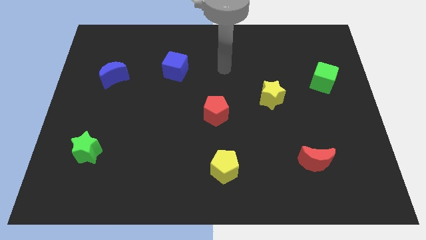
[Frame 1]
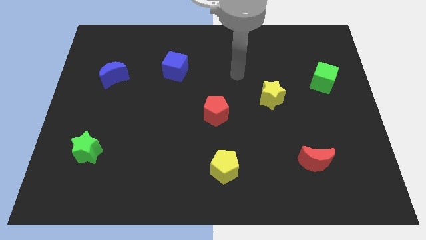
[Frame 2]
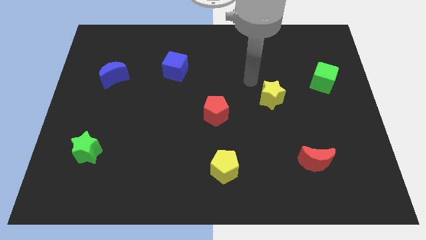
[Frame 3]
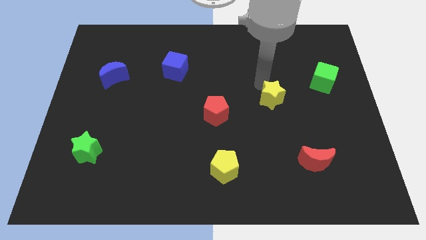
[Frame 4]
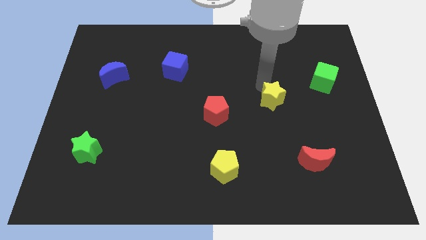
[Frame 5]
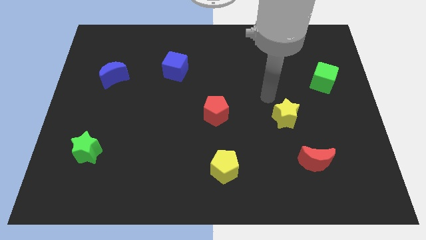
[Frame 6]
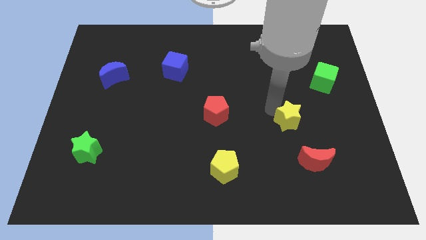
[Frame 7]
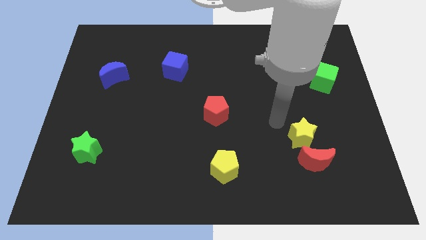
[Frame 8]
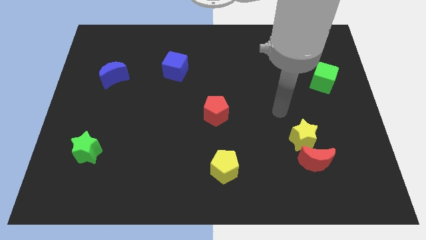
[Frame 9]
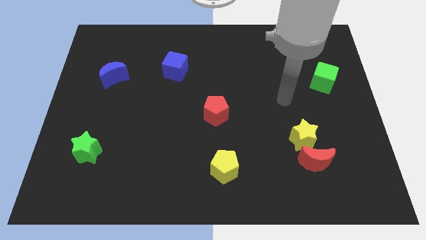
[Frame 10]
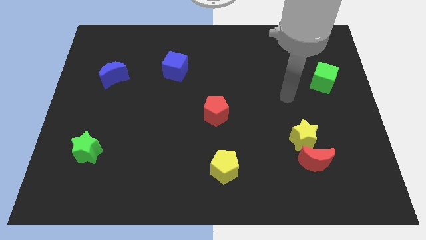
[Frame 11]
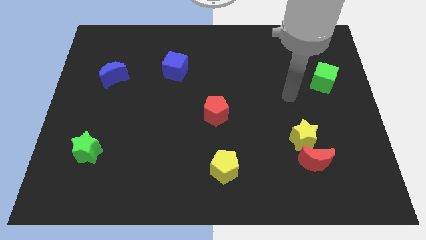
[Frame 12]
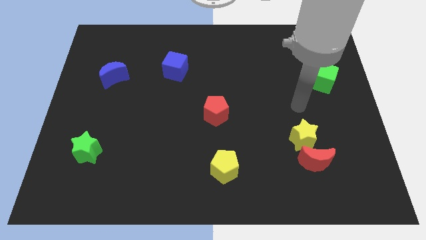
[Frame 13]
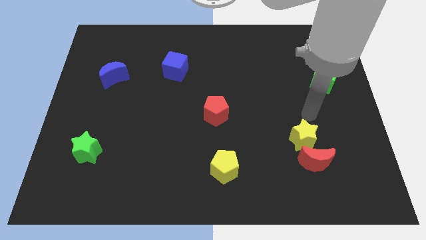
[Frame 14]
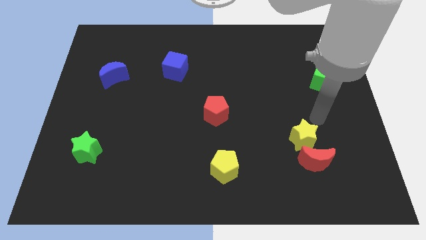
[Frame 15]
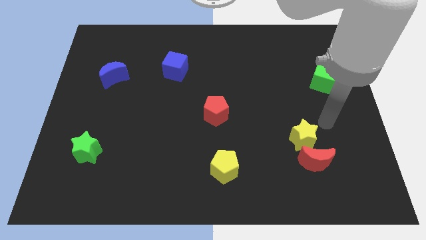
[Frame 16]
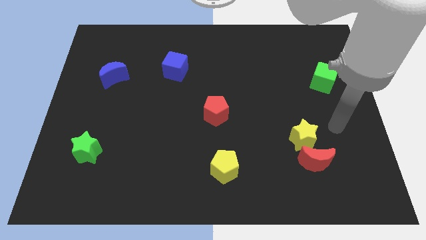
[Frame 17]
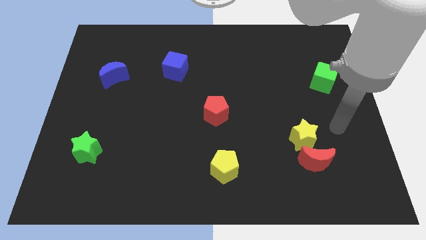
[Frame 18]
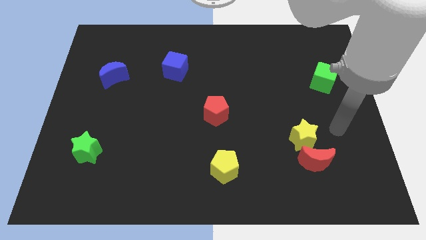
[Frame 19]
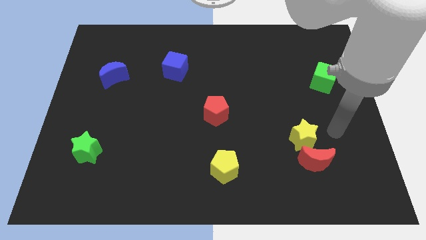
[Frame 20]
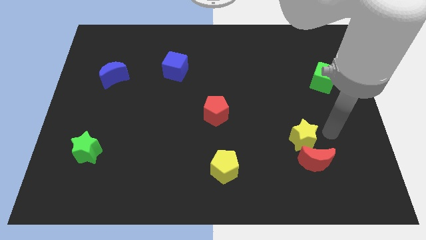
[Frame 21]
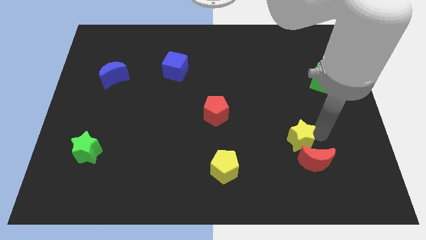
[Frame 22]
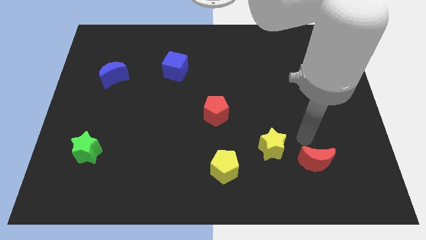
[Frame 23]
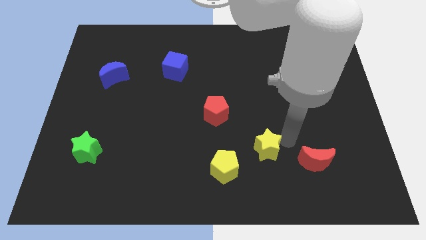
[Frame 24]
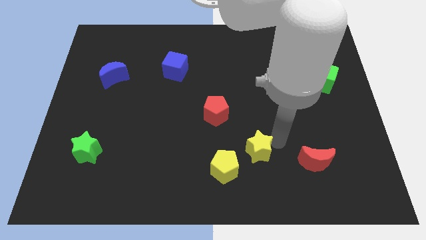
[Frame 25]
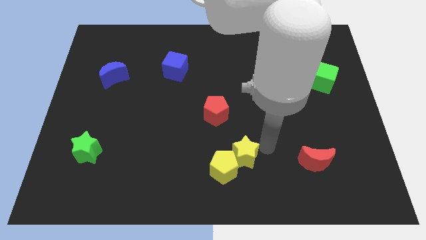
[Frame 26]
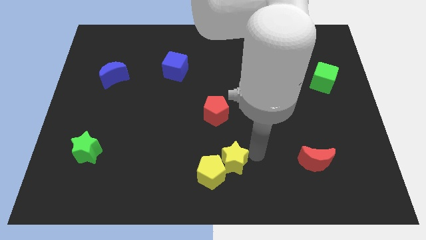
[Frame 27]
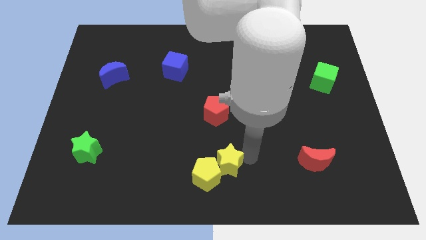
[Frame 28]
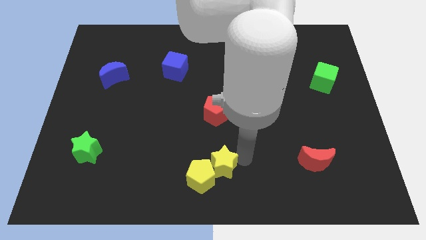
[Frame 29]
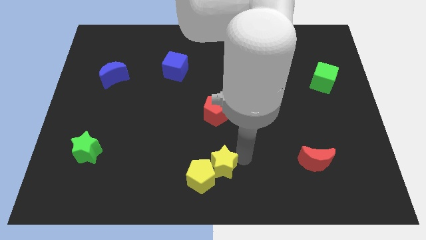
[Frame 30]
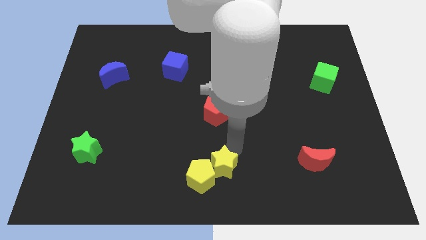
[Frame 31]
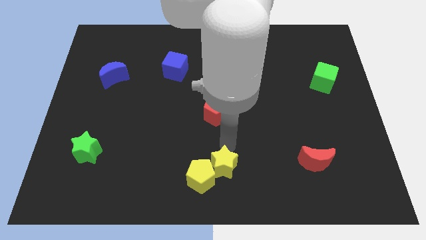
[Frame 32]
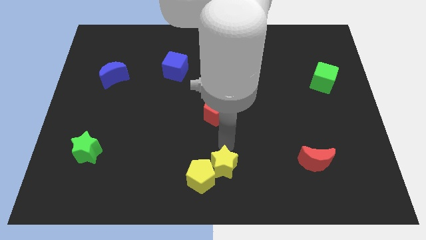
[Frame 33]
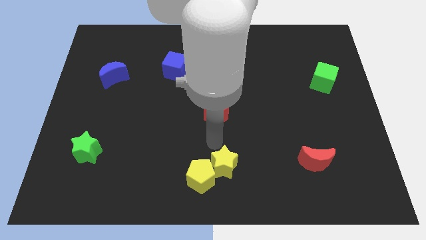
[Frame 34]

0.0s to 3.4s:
slide the yellow star into the yellow pentagon

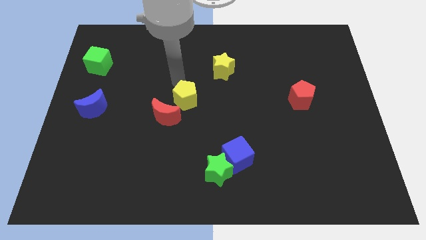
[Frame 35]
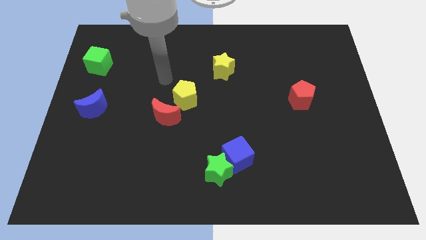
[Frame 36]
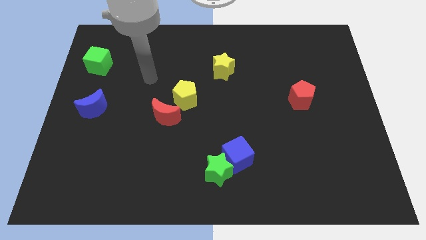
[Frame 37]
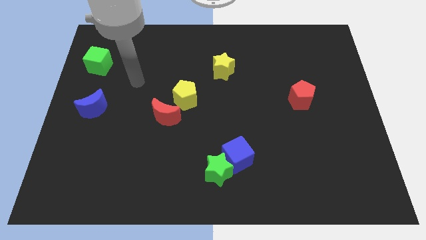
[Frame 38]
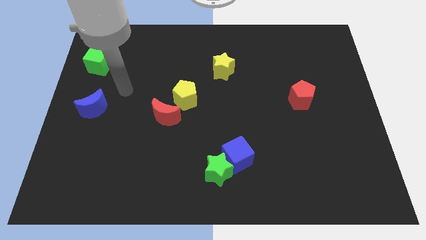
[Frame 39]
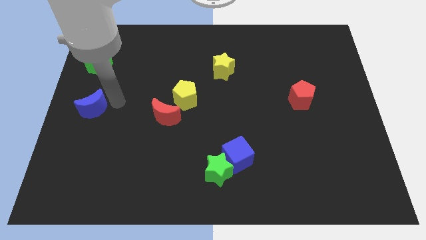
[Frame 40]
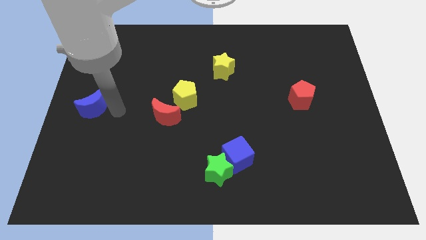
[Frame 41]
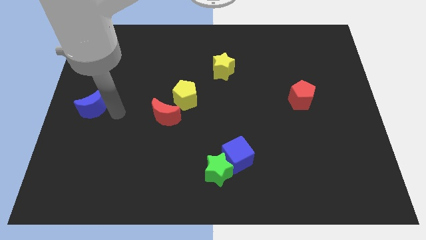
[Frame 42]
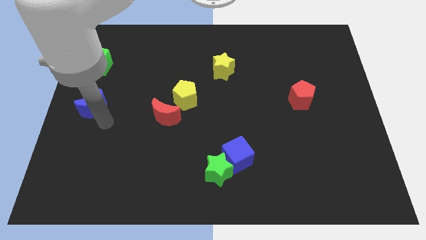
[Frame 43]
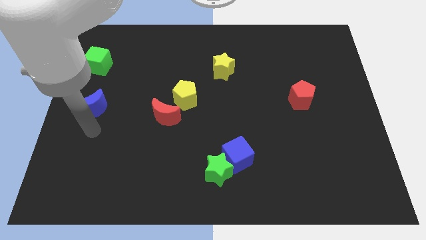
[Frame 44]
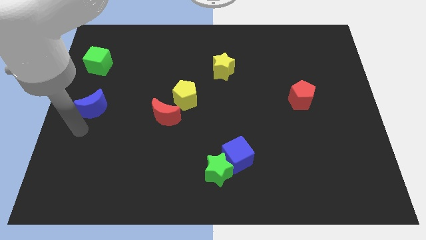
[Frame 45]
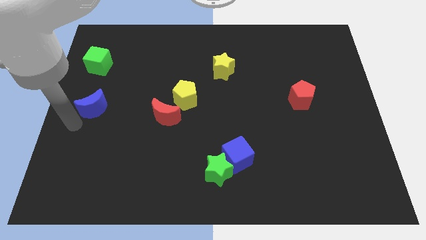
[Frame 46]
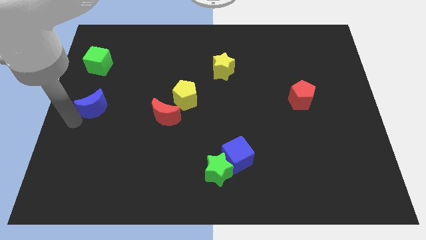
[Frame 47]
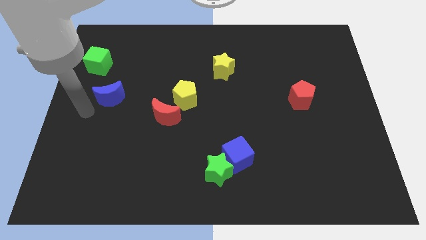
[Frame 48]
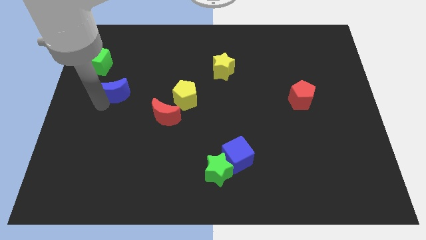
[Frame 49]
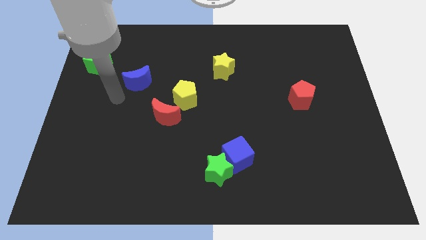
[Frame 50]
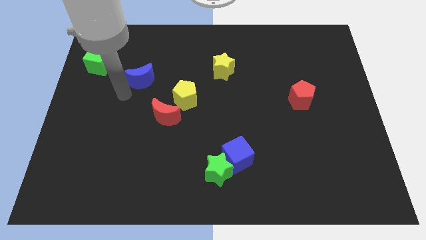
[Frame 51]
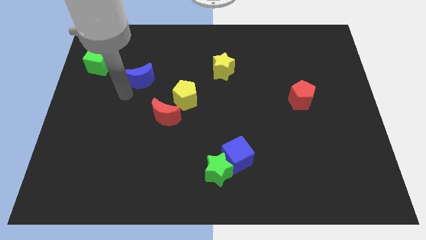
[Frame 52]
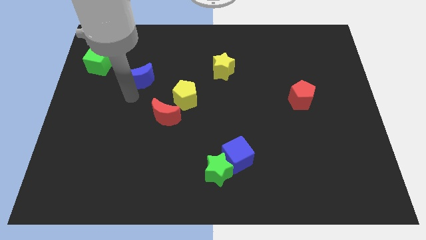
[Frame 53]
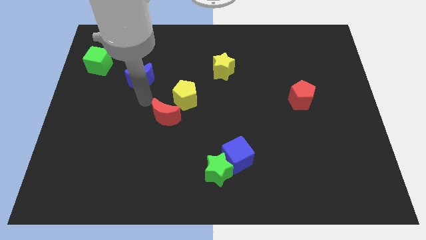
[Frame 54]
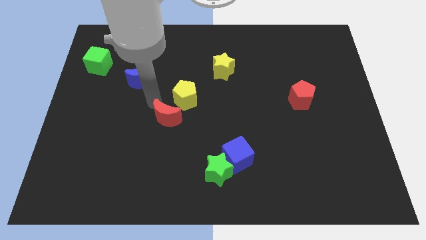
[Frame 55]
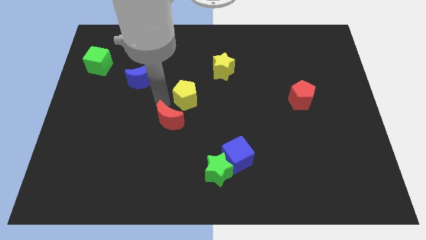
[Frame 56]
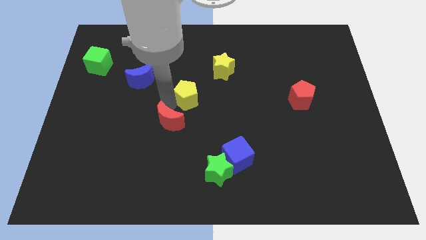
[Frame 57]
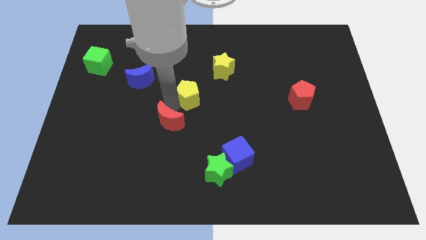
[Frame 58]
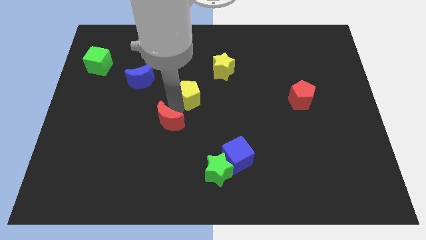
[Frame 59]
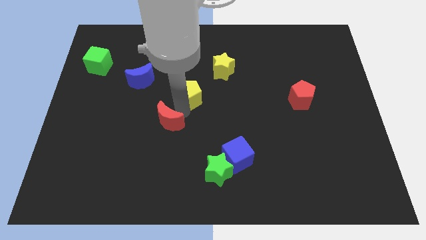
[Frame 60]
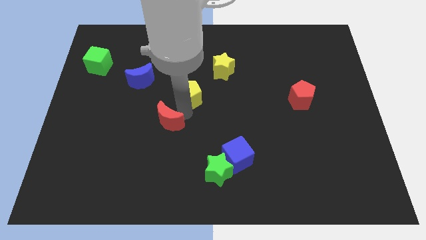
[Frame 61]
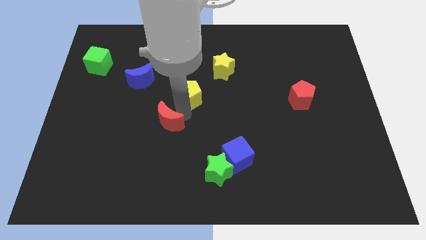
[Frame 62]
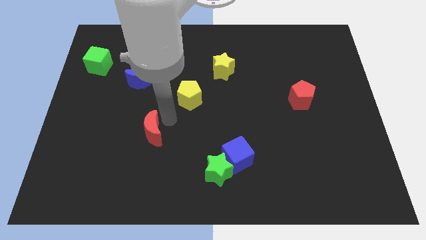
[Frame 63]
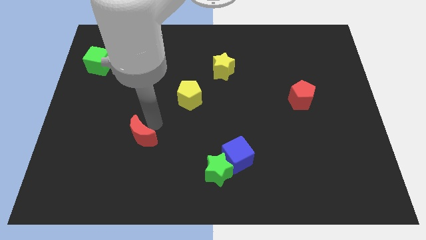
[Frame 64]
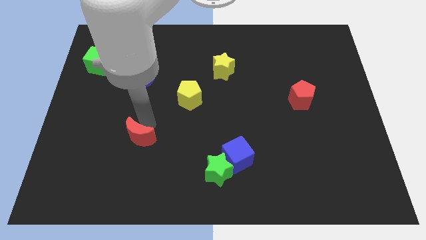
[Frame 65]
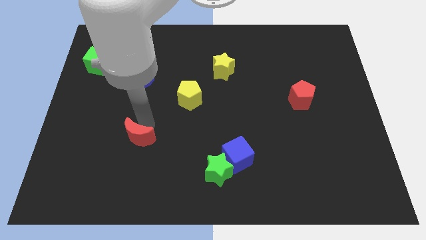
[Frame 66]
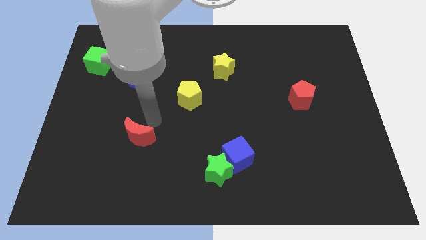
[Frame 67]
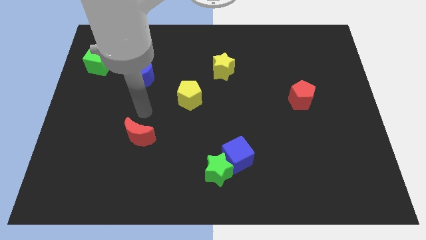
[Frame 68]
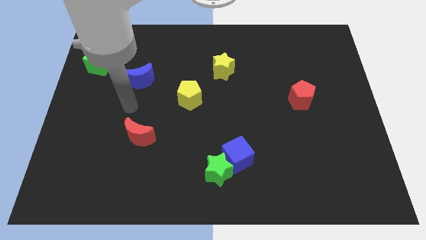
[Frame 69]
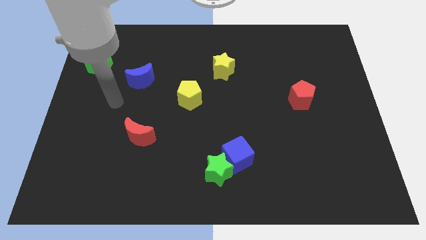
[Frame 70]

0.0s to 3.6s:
move the arm away from the yellow pentagon

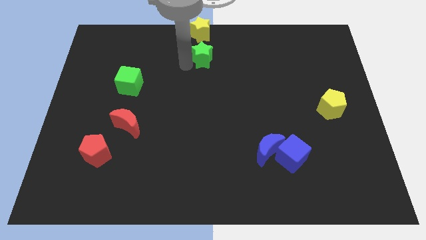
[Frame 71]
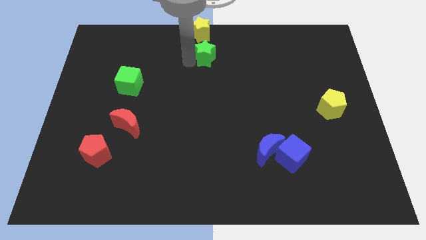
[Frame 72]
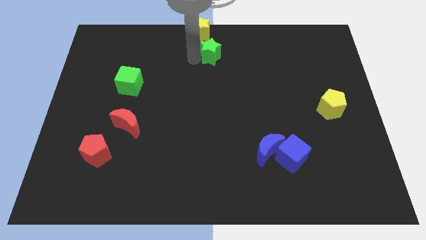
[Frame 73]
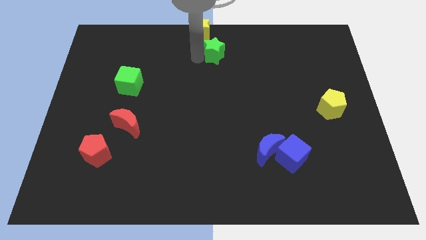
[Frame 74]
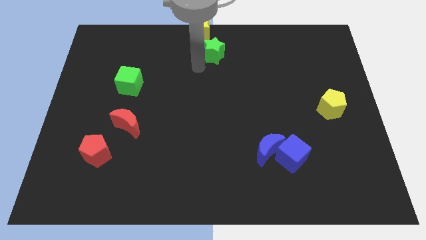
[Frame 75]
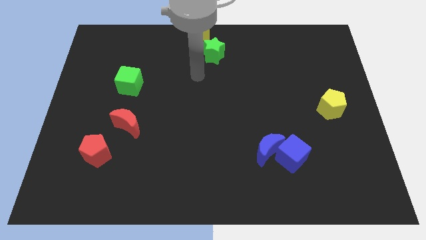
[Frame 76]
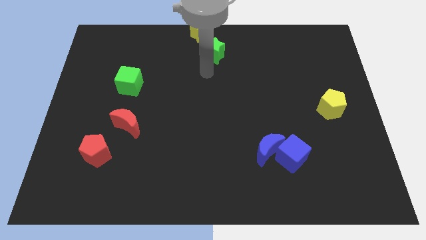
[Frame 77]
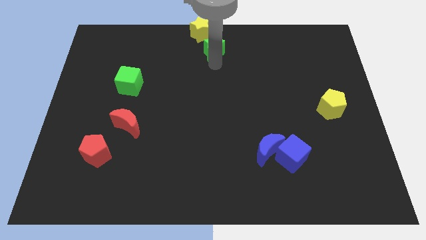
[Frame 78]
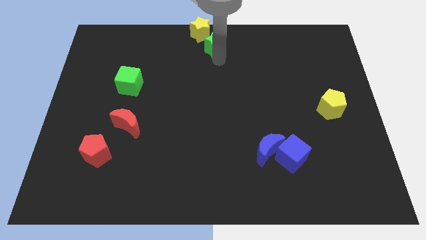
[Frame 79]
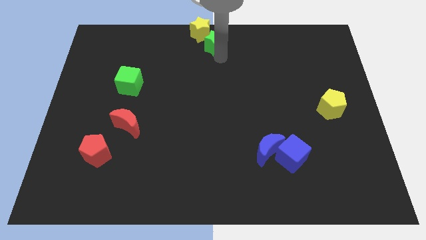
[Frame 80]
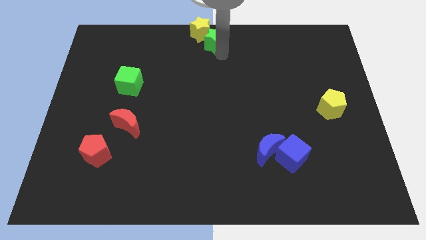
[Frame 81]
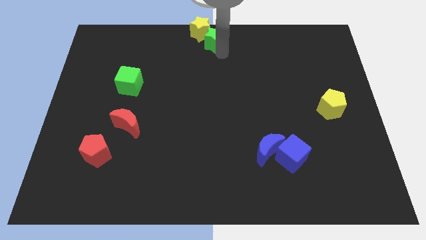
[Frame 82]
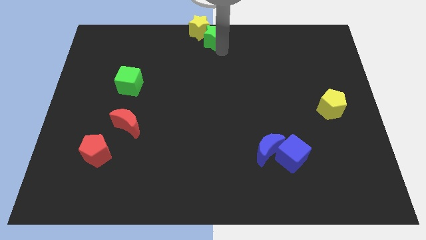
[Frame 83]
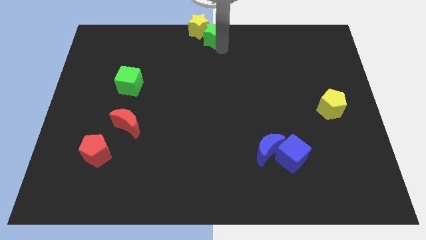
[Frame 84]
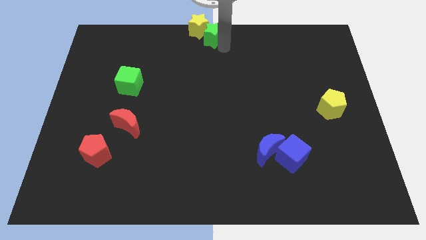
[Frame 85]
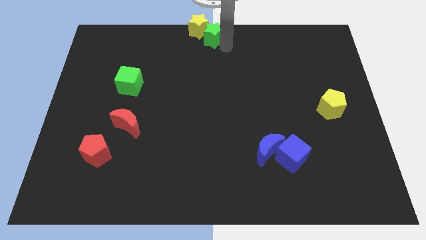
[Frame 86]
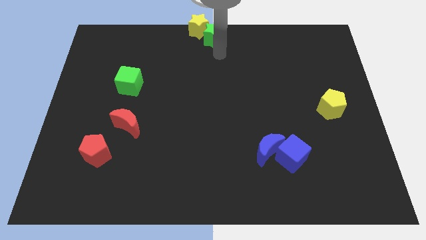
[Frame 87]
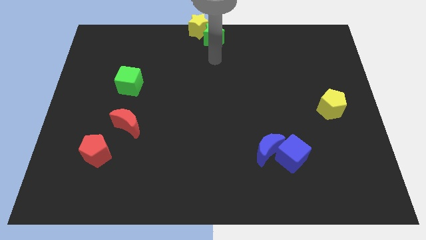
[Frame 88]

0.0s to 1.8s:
push the green star into the bottom of the yellow star

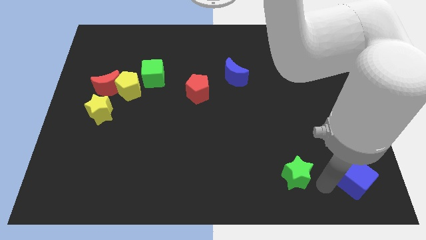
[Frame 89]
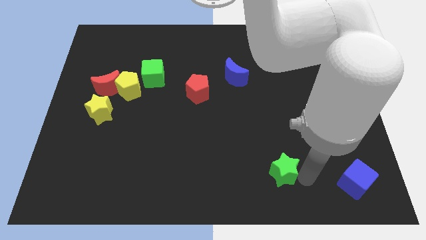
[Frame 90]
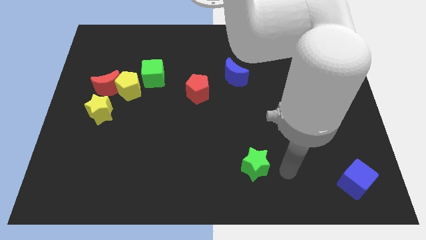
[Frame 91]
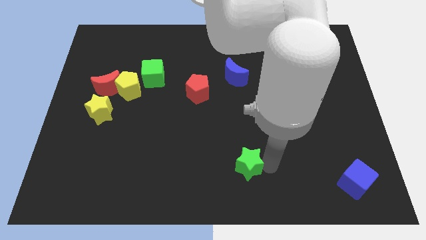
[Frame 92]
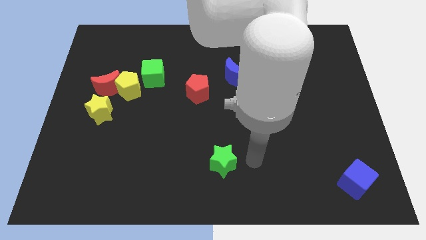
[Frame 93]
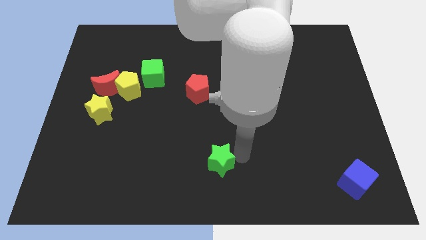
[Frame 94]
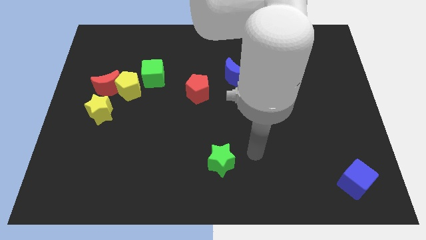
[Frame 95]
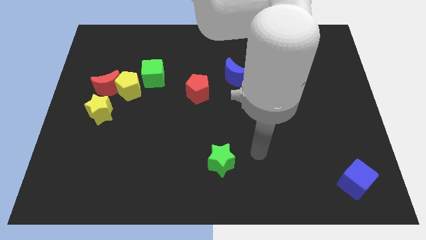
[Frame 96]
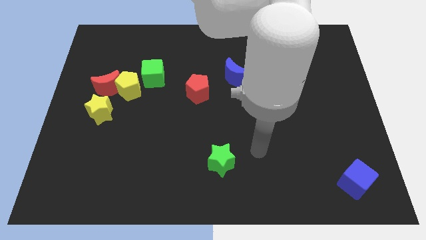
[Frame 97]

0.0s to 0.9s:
place green star diagonal to the yellow pentagon
